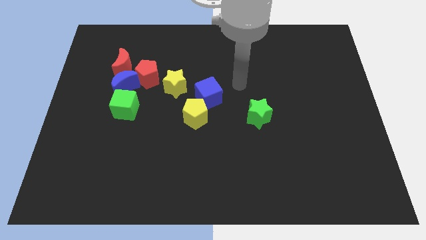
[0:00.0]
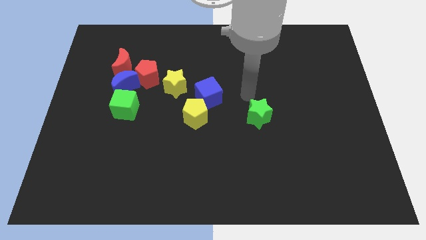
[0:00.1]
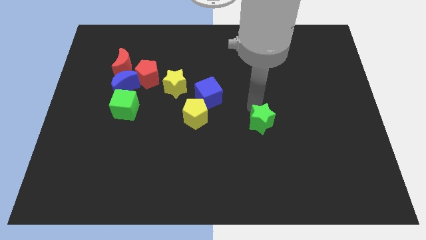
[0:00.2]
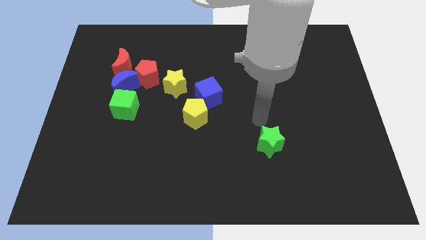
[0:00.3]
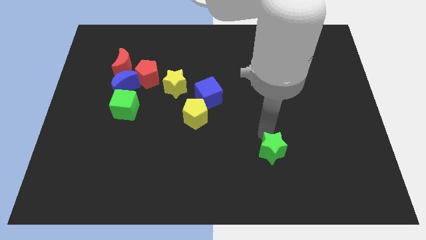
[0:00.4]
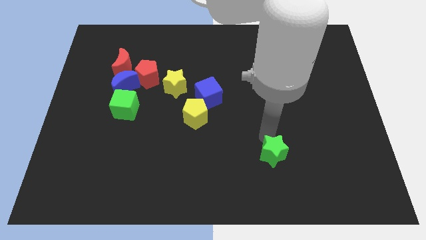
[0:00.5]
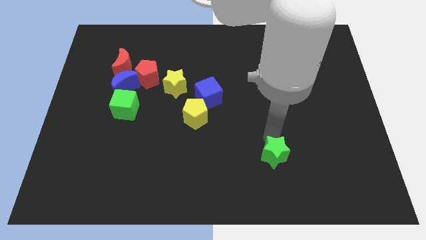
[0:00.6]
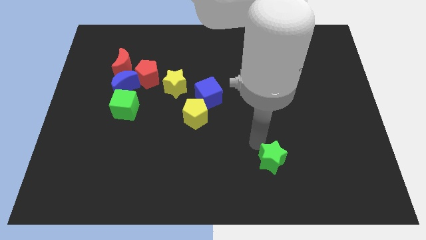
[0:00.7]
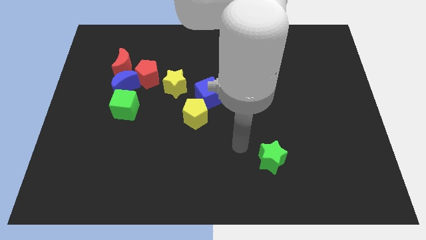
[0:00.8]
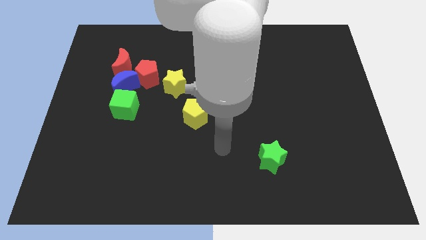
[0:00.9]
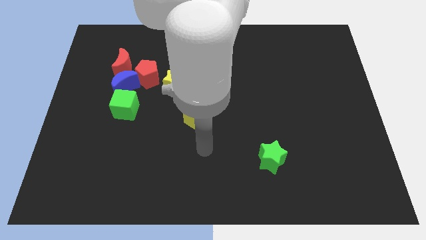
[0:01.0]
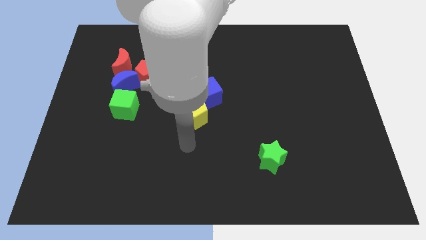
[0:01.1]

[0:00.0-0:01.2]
move green star towards bottom center

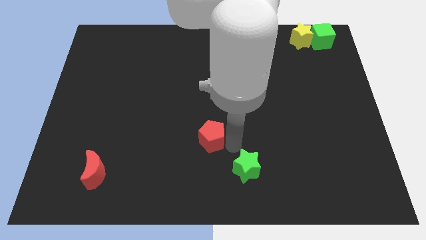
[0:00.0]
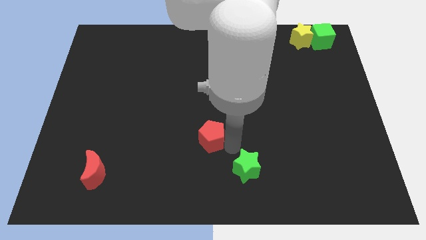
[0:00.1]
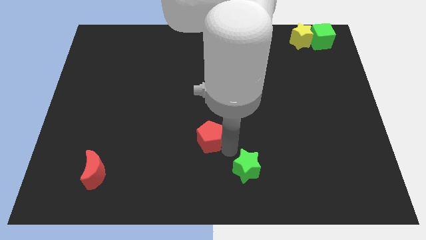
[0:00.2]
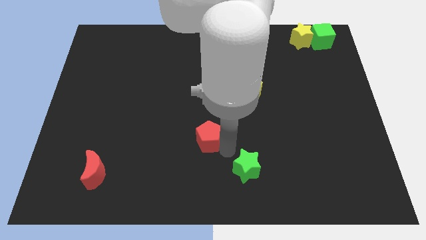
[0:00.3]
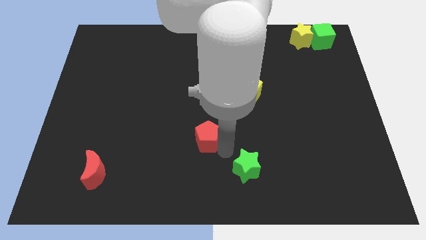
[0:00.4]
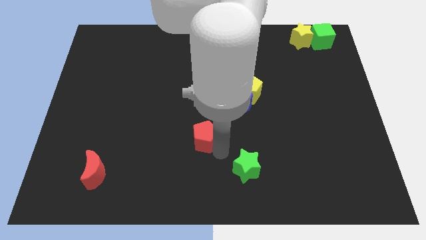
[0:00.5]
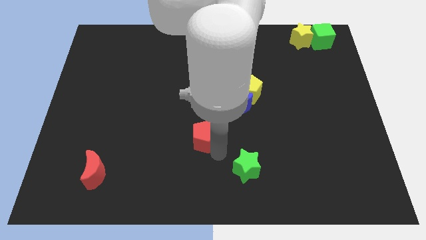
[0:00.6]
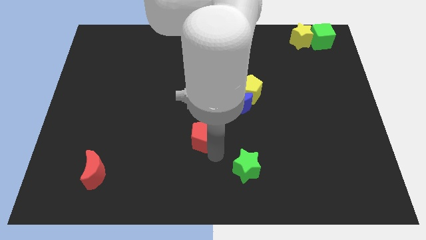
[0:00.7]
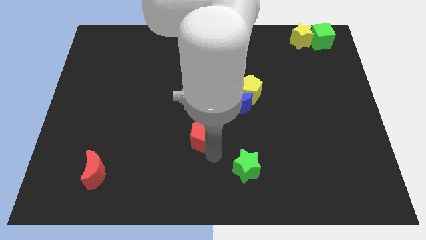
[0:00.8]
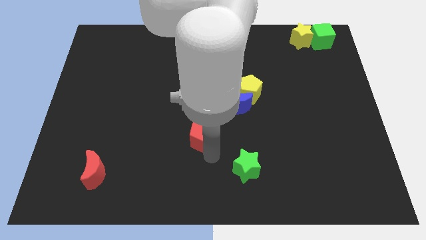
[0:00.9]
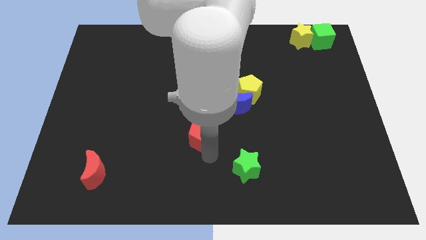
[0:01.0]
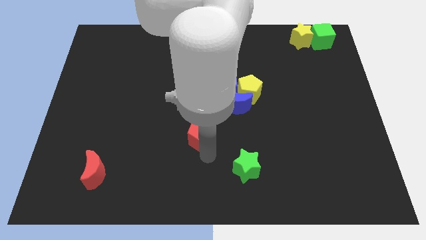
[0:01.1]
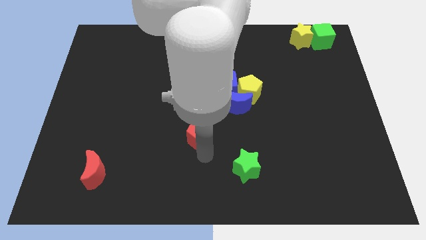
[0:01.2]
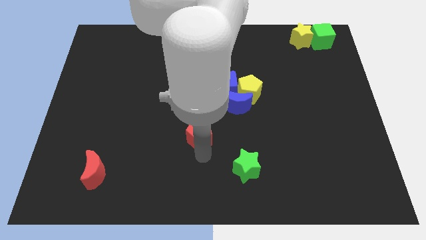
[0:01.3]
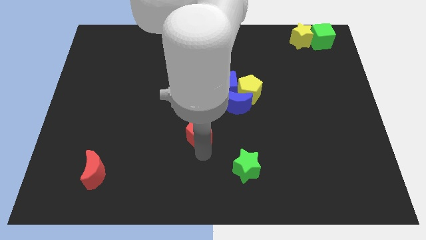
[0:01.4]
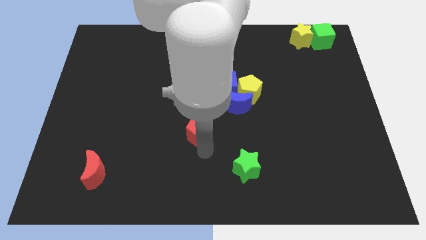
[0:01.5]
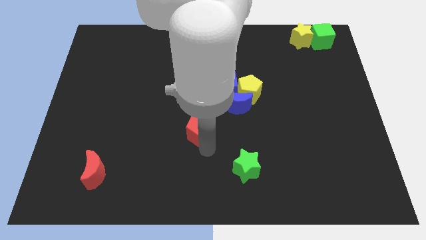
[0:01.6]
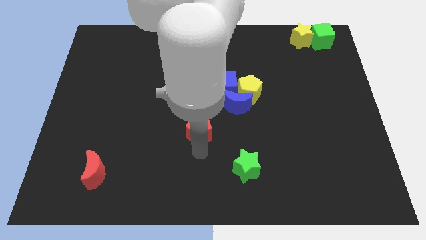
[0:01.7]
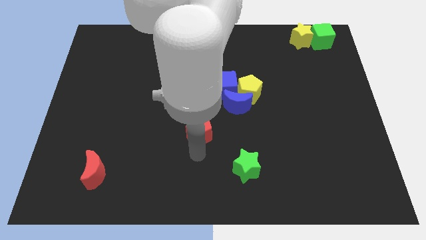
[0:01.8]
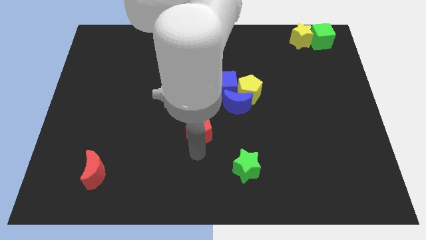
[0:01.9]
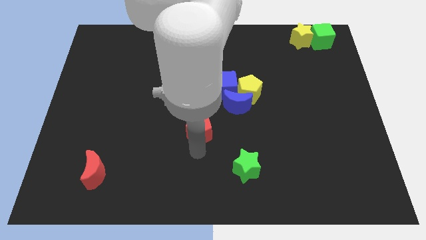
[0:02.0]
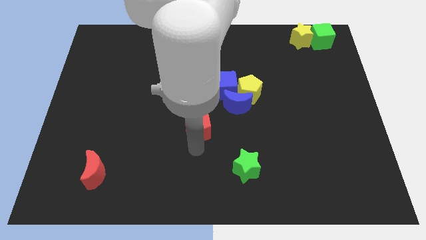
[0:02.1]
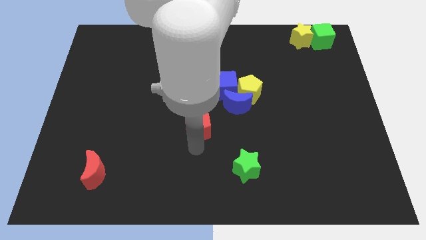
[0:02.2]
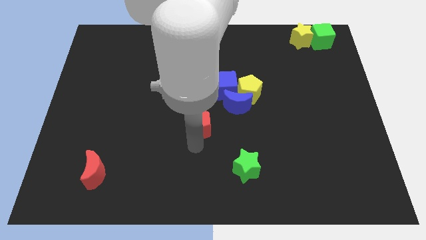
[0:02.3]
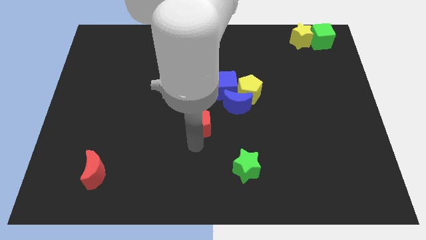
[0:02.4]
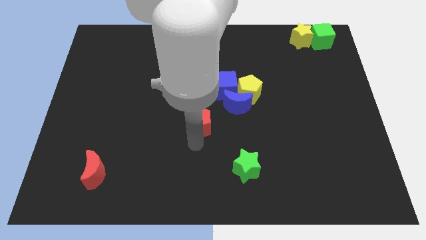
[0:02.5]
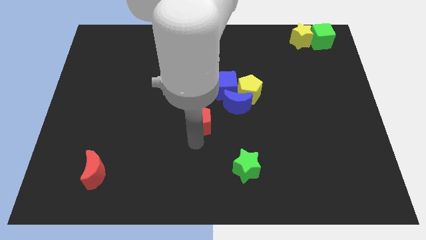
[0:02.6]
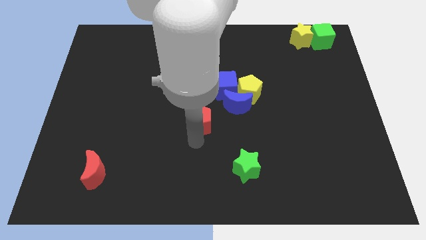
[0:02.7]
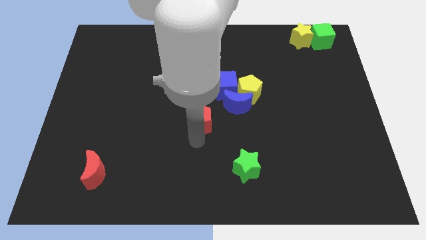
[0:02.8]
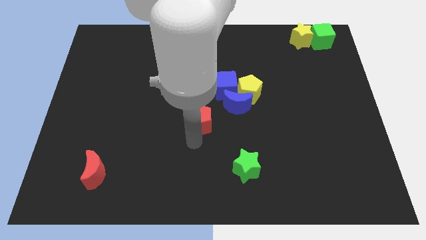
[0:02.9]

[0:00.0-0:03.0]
push the red pentagon

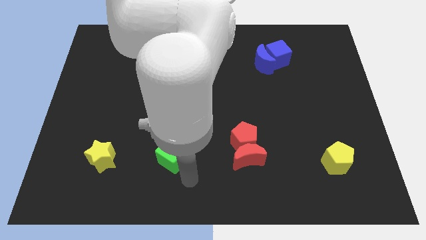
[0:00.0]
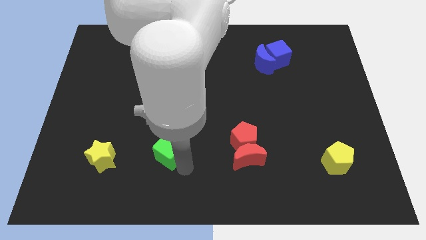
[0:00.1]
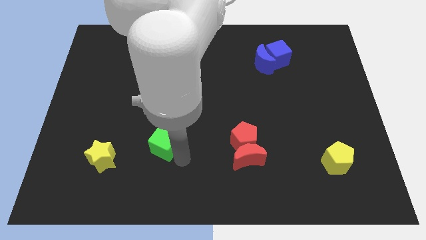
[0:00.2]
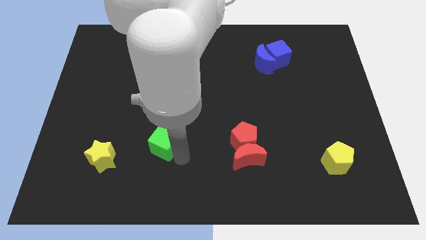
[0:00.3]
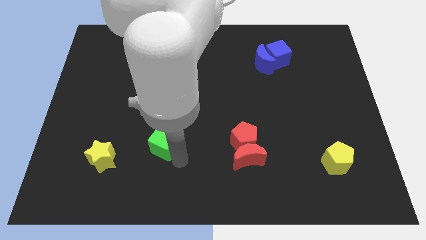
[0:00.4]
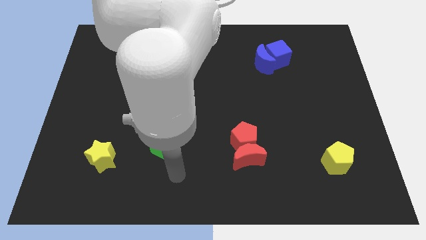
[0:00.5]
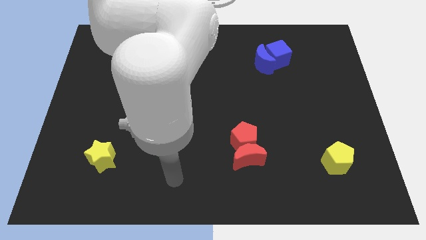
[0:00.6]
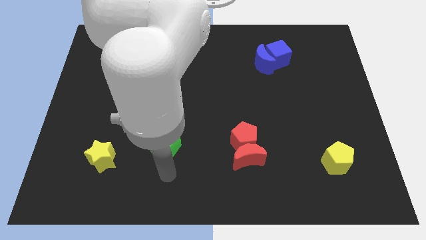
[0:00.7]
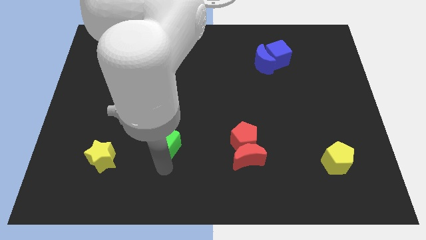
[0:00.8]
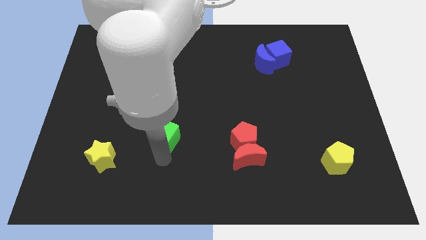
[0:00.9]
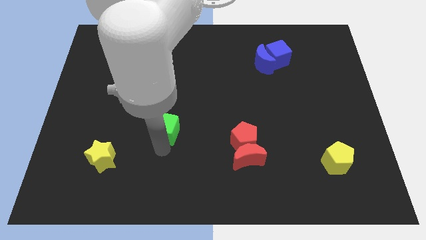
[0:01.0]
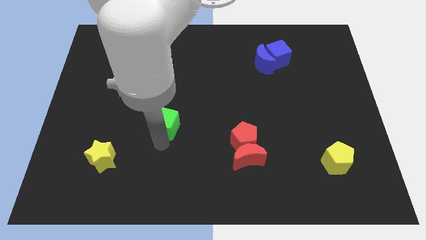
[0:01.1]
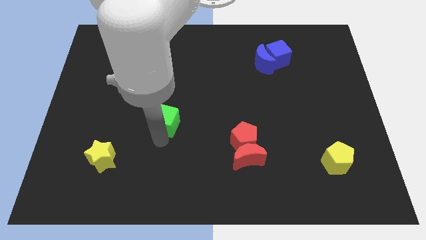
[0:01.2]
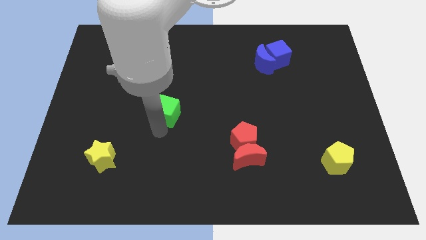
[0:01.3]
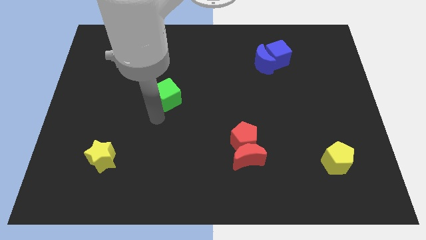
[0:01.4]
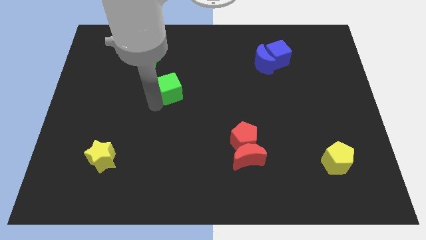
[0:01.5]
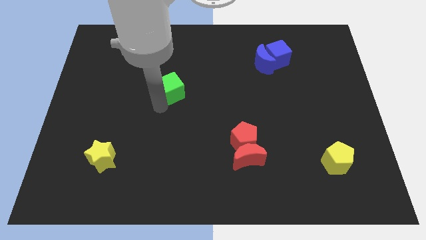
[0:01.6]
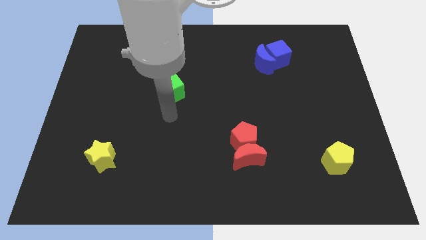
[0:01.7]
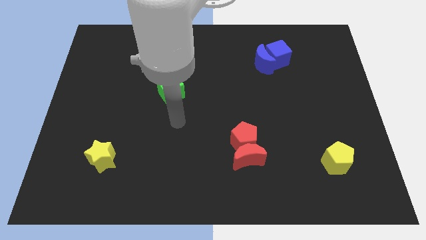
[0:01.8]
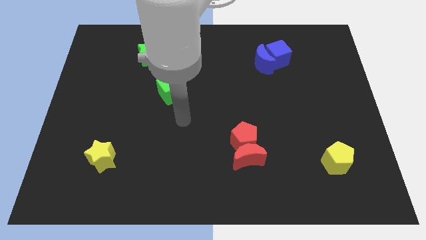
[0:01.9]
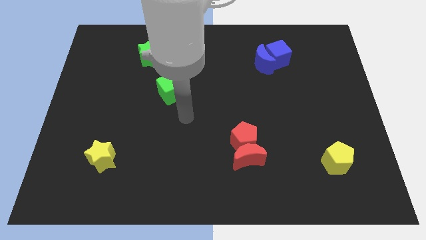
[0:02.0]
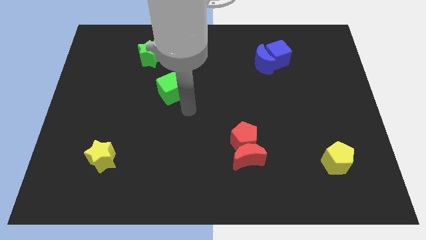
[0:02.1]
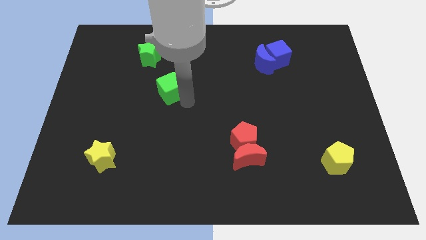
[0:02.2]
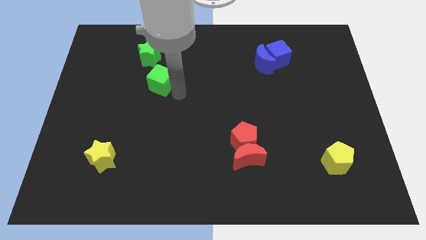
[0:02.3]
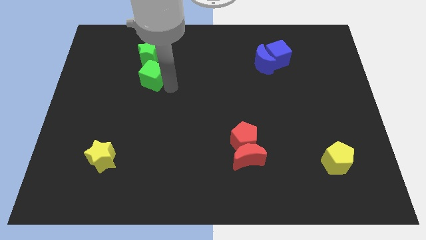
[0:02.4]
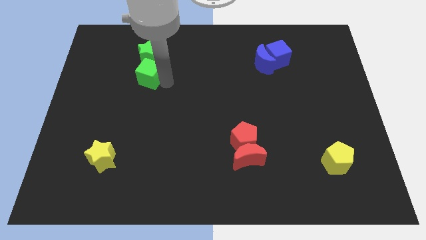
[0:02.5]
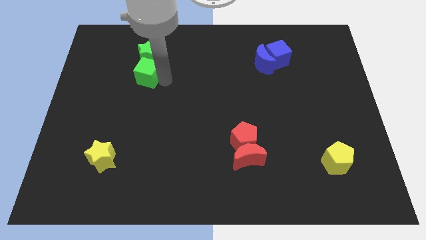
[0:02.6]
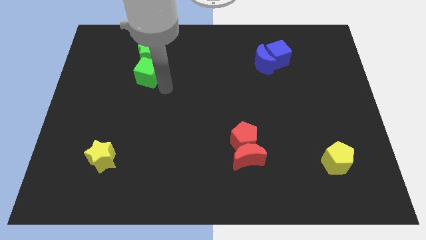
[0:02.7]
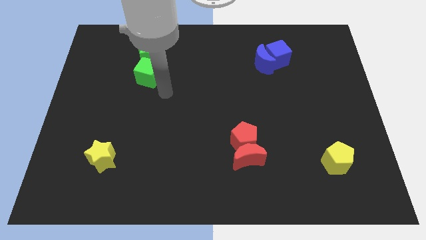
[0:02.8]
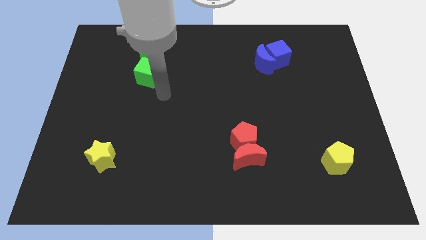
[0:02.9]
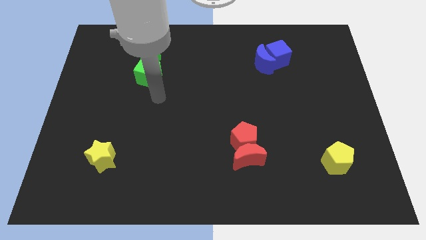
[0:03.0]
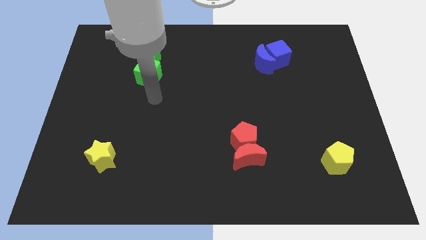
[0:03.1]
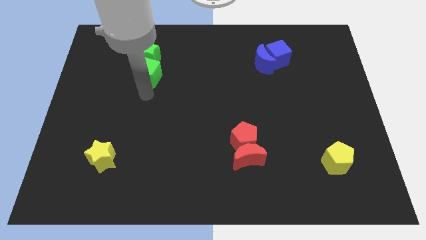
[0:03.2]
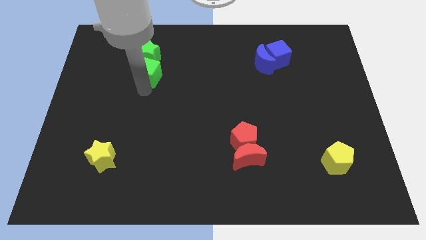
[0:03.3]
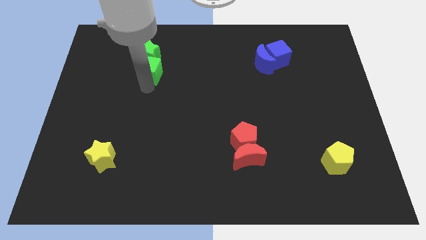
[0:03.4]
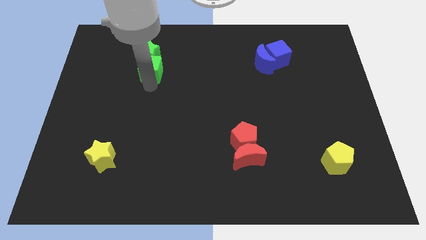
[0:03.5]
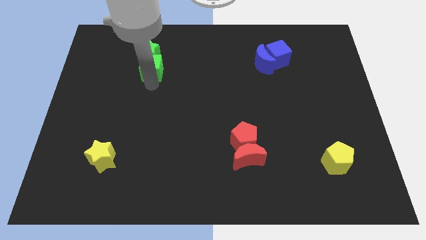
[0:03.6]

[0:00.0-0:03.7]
put the green cube at the bottom of the green star

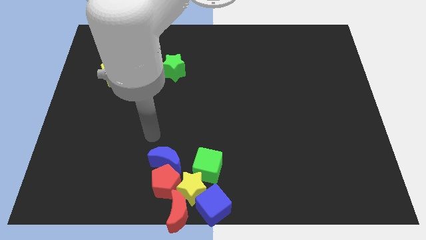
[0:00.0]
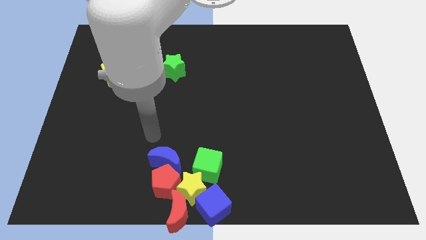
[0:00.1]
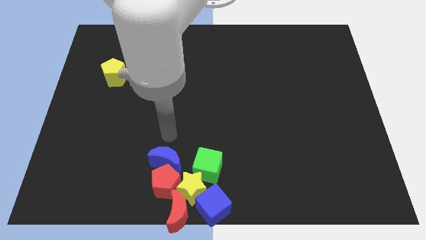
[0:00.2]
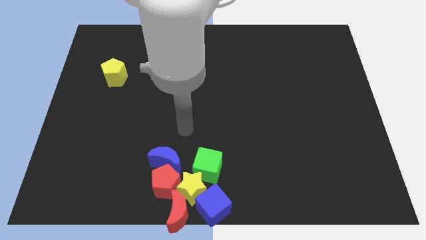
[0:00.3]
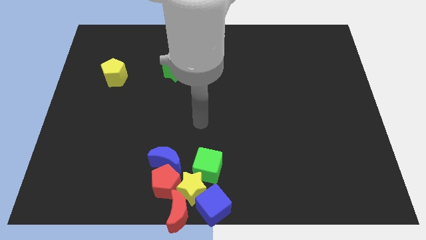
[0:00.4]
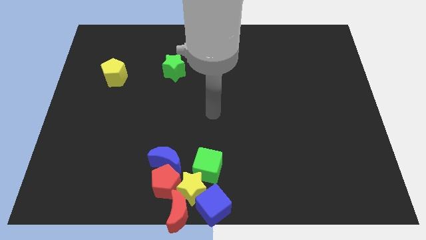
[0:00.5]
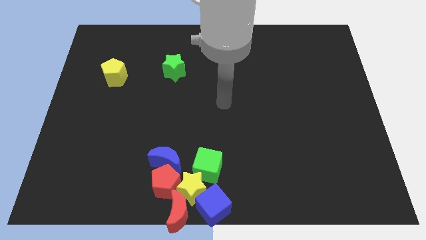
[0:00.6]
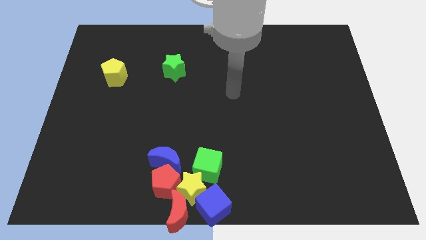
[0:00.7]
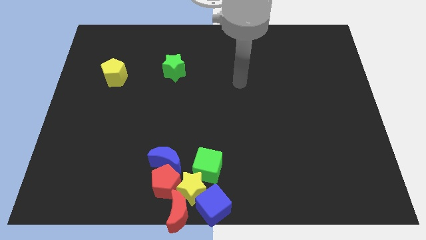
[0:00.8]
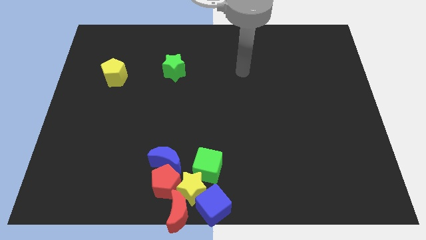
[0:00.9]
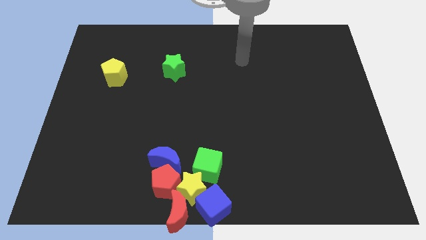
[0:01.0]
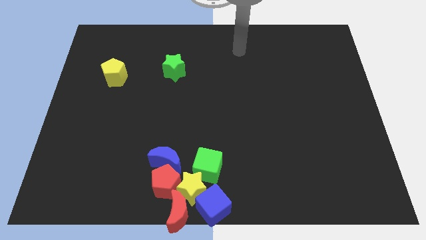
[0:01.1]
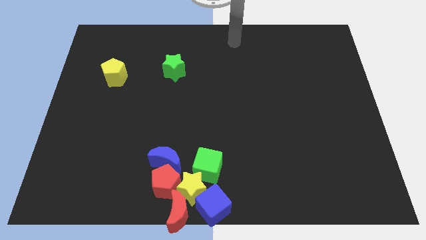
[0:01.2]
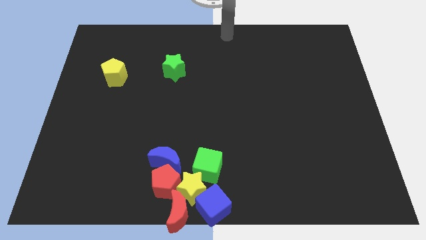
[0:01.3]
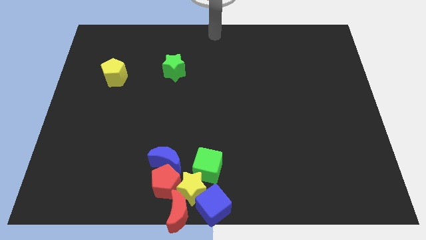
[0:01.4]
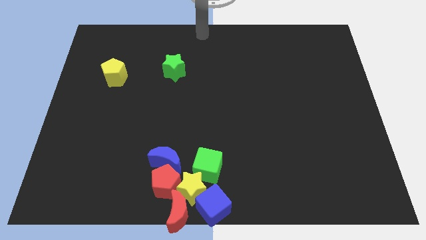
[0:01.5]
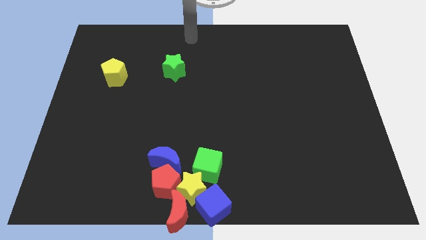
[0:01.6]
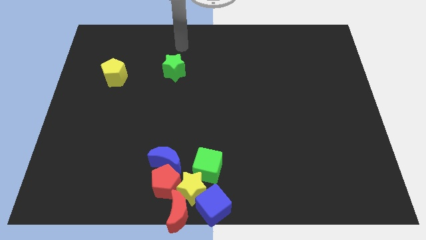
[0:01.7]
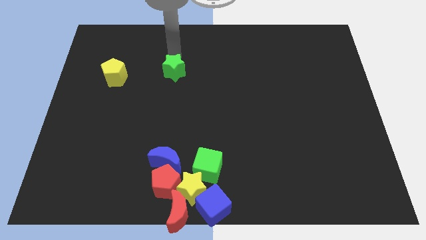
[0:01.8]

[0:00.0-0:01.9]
move your arm on top of the green star
